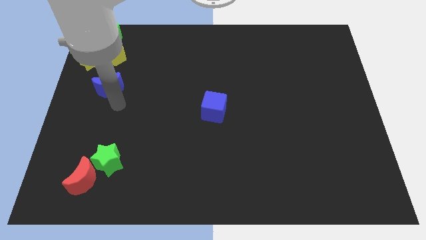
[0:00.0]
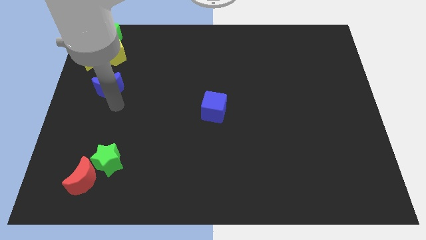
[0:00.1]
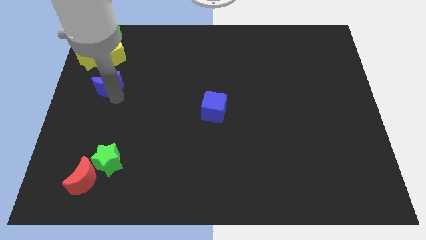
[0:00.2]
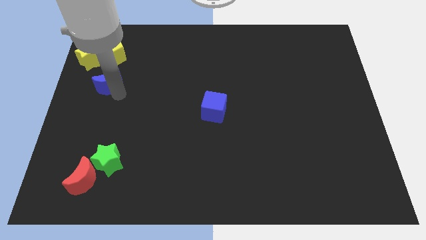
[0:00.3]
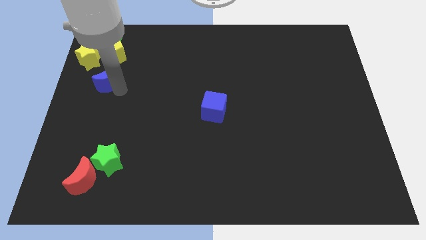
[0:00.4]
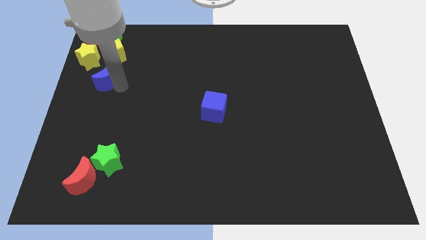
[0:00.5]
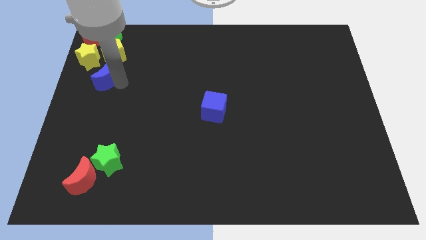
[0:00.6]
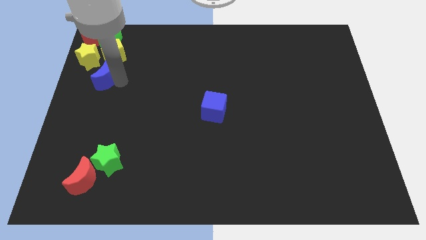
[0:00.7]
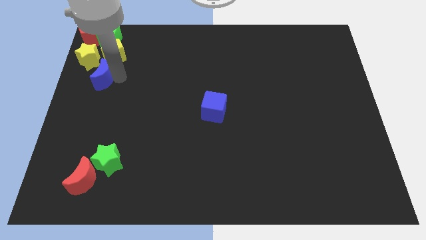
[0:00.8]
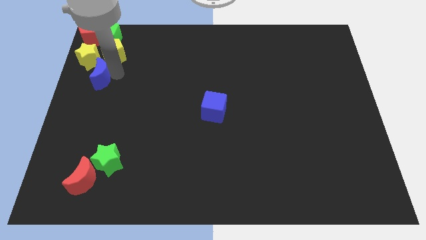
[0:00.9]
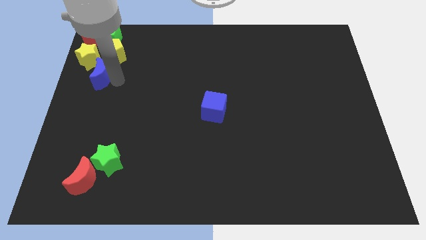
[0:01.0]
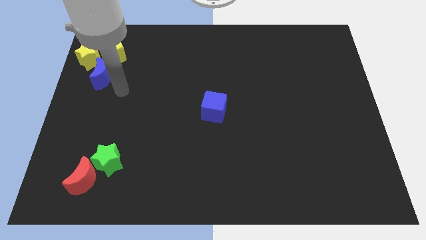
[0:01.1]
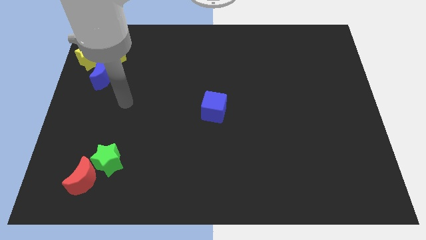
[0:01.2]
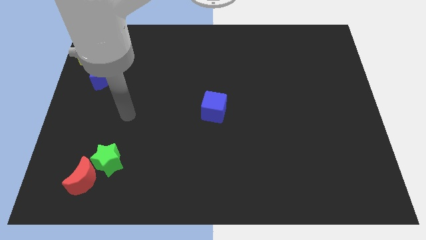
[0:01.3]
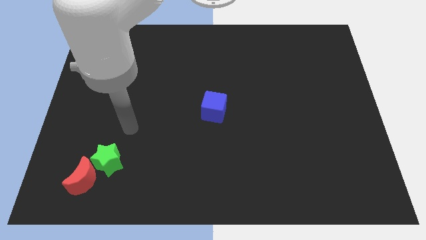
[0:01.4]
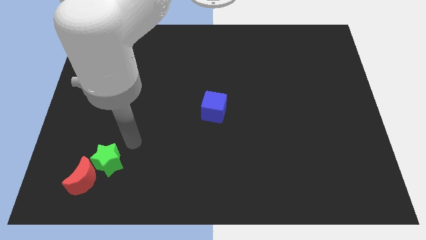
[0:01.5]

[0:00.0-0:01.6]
move the blue crescent to the top left of the board

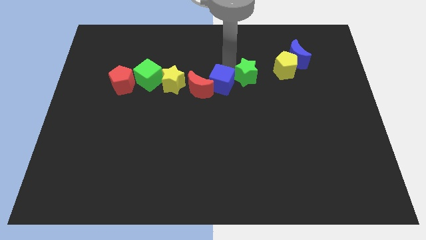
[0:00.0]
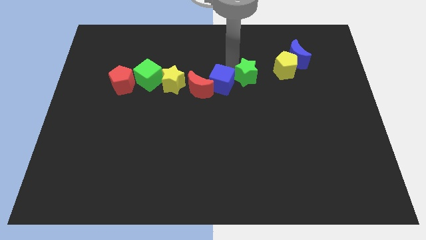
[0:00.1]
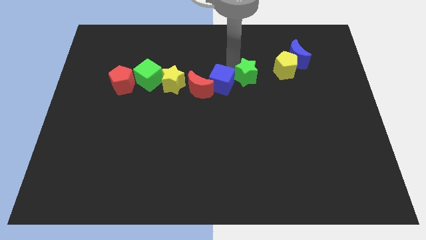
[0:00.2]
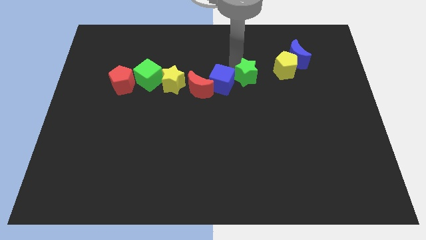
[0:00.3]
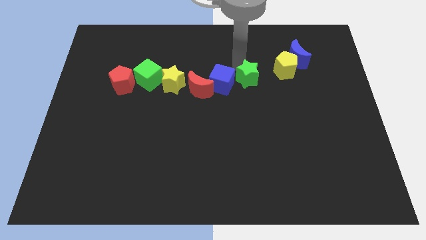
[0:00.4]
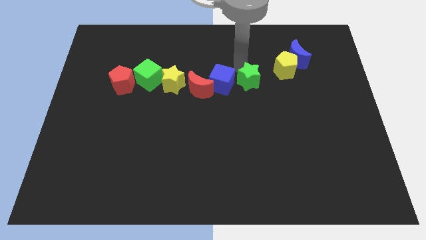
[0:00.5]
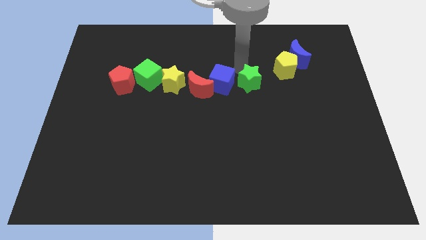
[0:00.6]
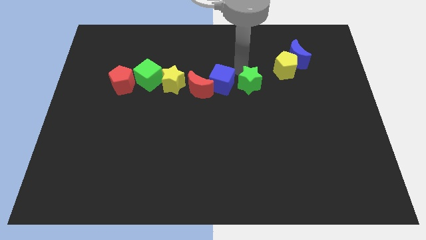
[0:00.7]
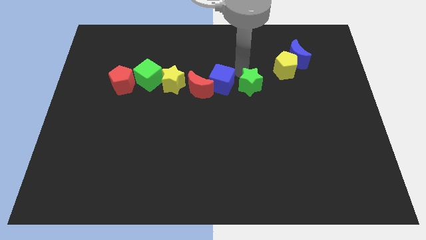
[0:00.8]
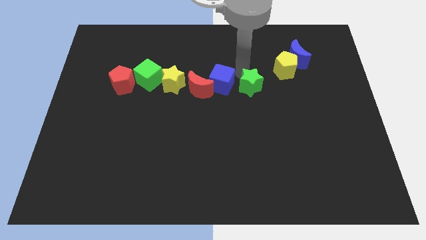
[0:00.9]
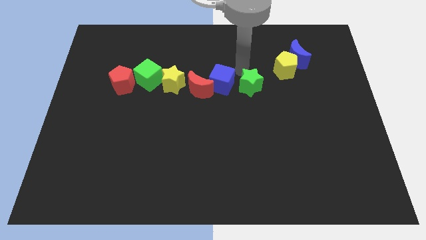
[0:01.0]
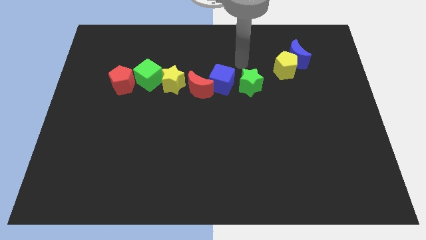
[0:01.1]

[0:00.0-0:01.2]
place the green star in between the blue cube and the green star

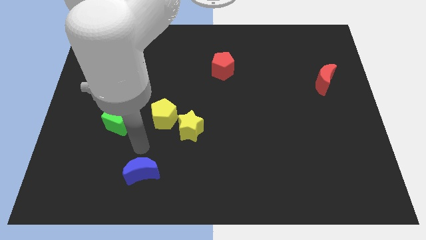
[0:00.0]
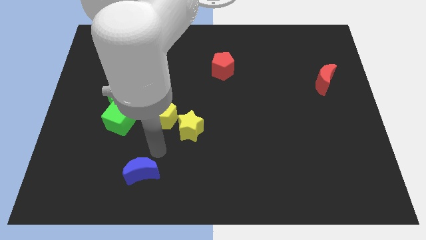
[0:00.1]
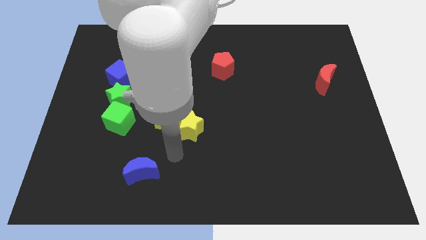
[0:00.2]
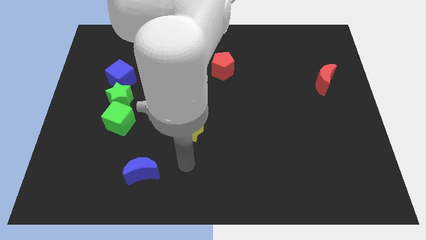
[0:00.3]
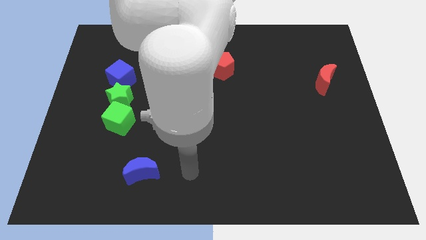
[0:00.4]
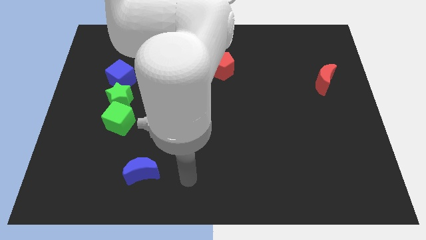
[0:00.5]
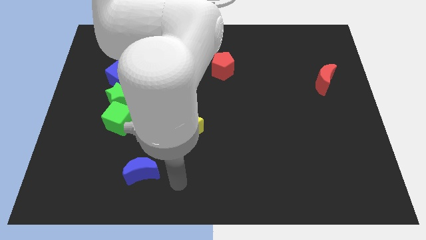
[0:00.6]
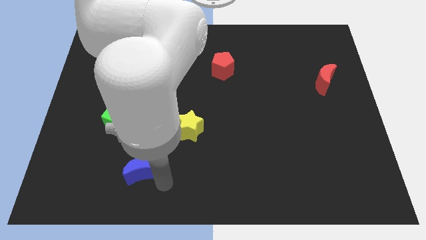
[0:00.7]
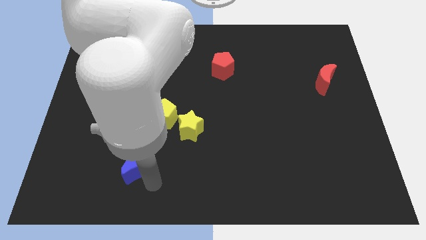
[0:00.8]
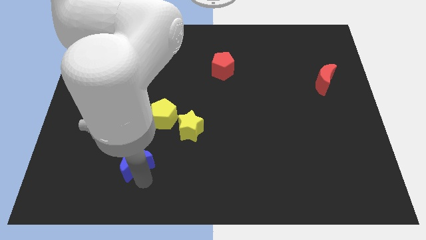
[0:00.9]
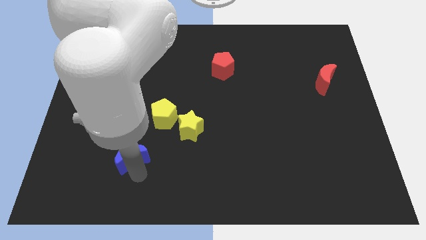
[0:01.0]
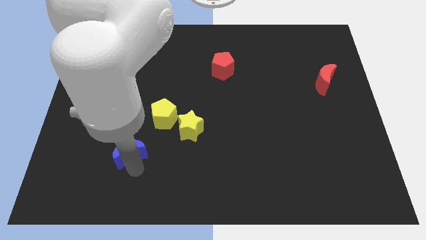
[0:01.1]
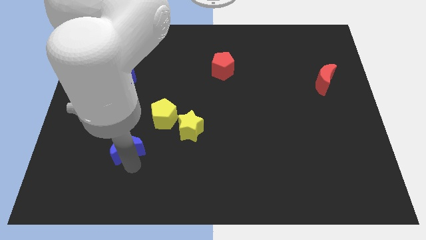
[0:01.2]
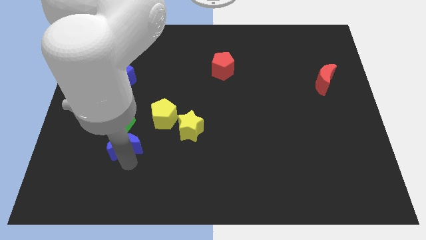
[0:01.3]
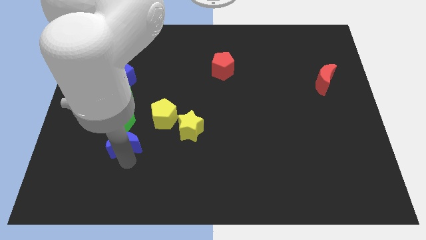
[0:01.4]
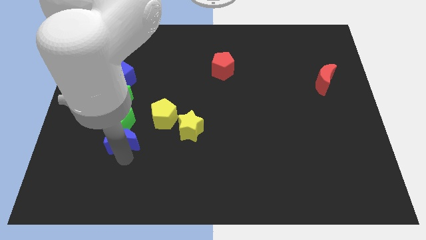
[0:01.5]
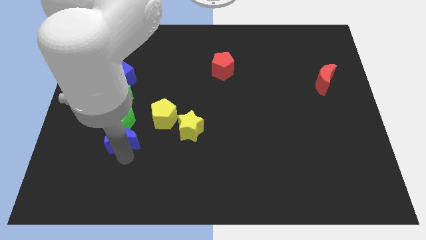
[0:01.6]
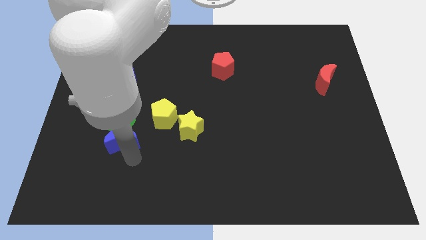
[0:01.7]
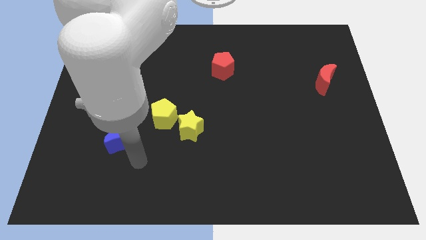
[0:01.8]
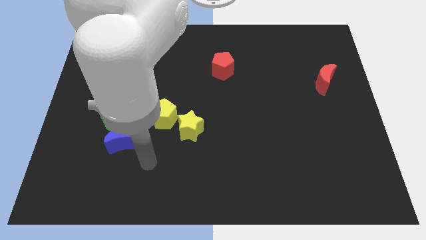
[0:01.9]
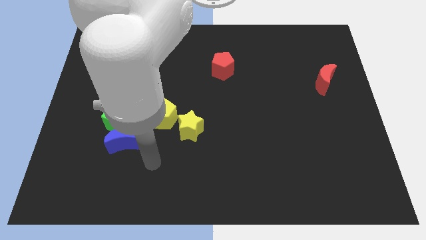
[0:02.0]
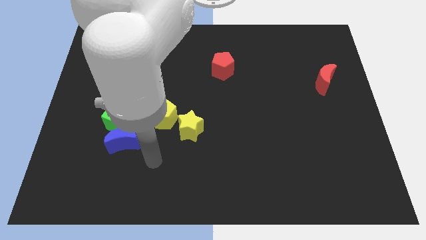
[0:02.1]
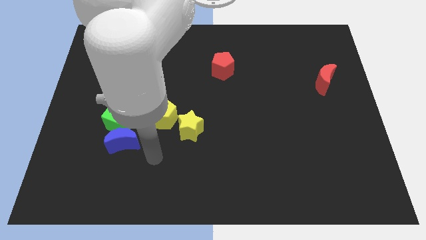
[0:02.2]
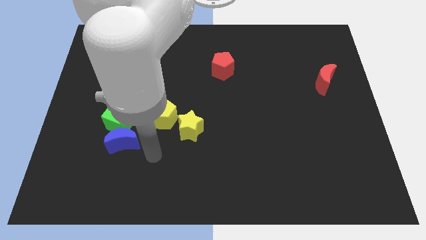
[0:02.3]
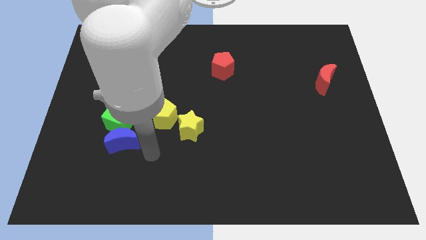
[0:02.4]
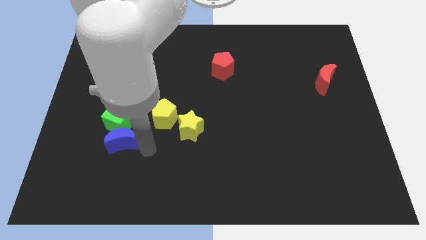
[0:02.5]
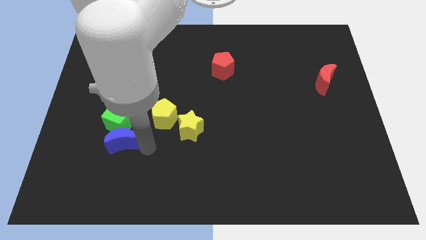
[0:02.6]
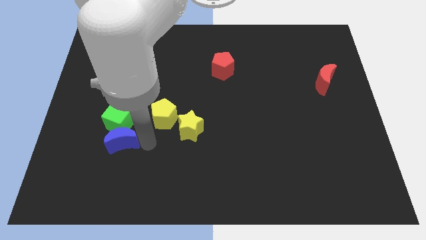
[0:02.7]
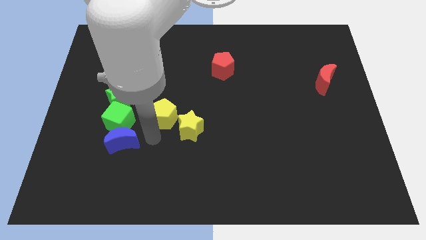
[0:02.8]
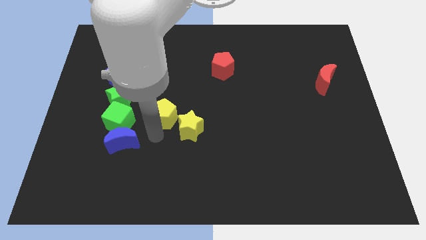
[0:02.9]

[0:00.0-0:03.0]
place the blue moon to the bottom of green cube

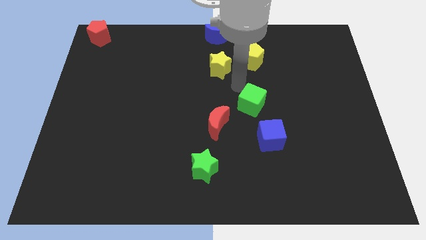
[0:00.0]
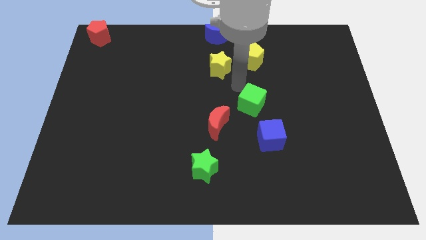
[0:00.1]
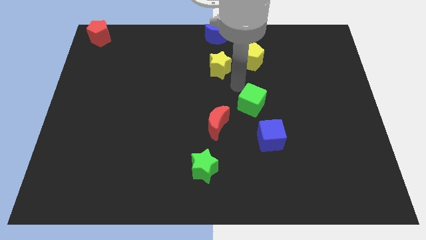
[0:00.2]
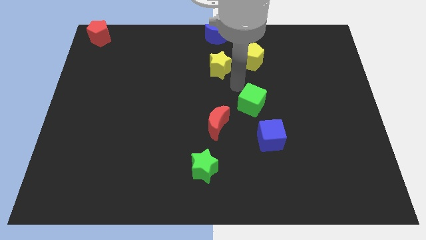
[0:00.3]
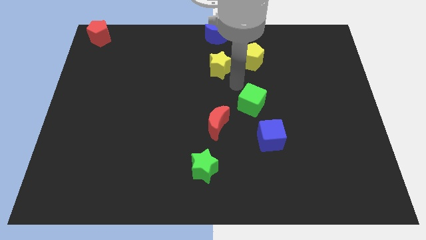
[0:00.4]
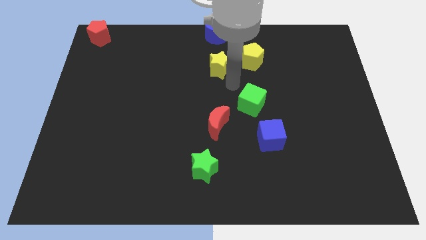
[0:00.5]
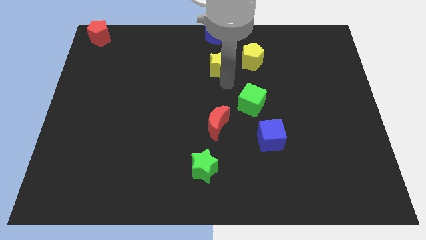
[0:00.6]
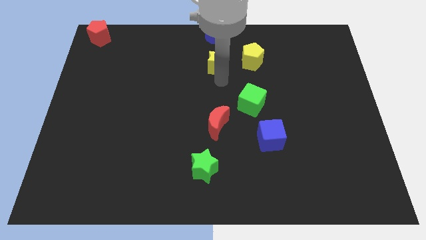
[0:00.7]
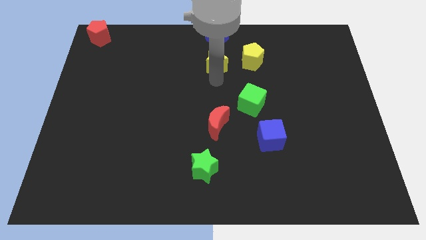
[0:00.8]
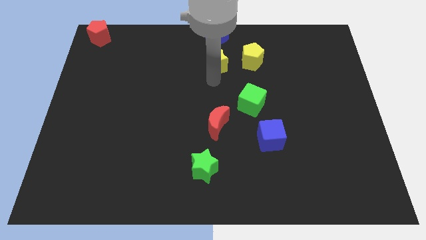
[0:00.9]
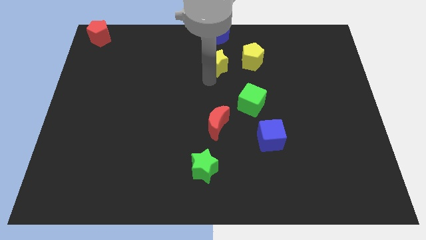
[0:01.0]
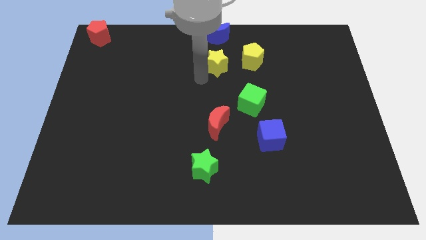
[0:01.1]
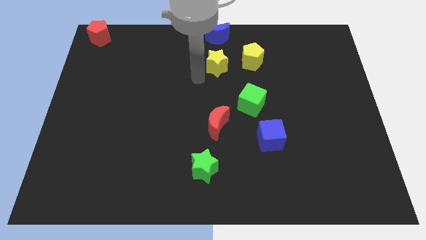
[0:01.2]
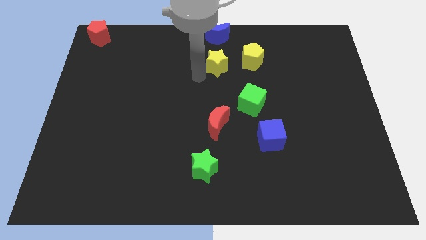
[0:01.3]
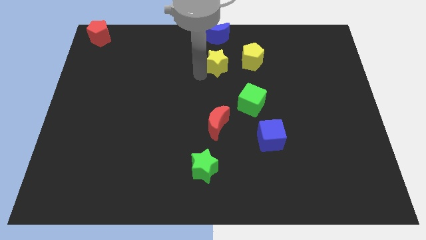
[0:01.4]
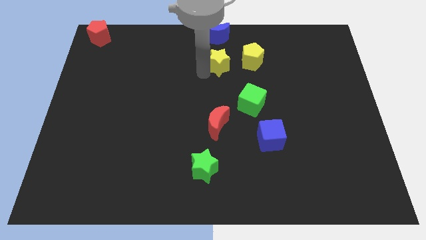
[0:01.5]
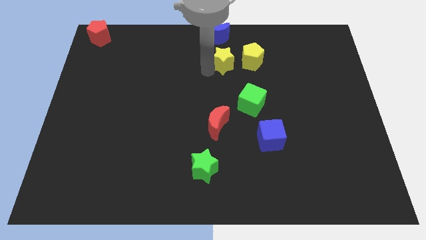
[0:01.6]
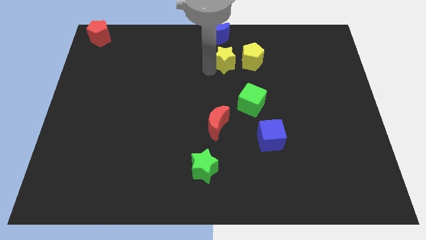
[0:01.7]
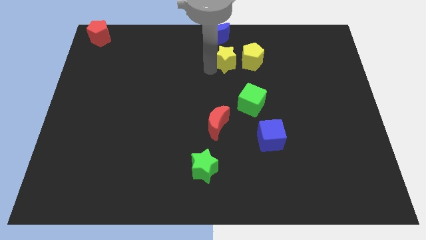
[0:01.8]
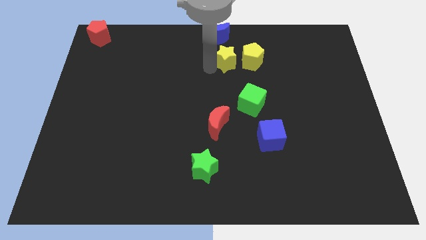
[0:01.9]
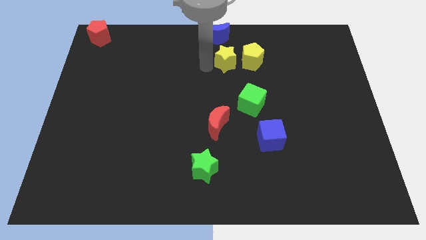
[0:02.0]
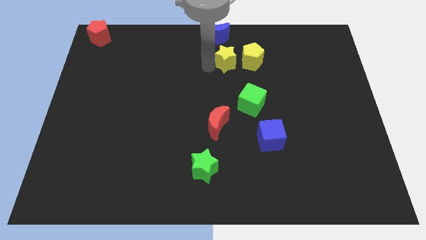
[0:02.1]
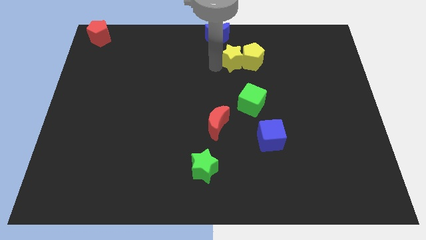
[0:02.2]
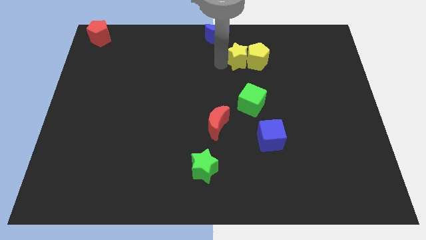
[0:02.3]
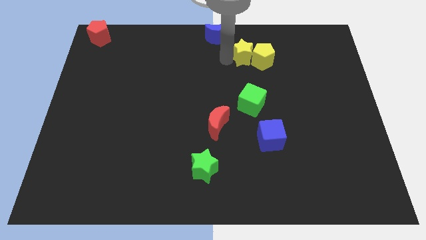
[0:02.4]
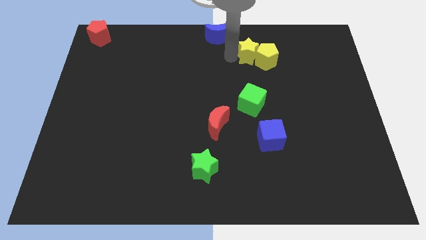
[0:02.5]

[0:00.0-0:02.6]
push the yellow star into yellow pentagon

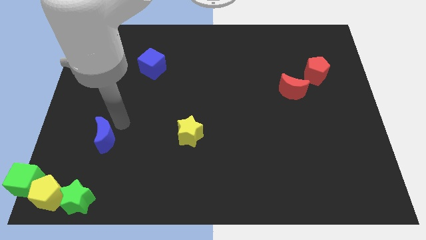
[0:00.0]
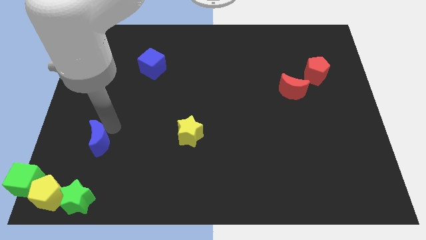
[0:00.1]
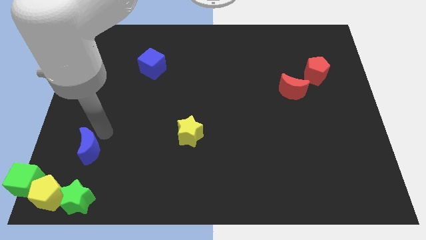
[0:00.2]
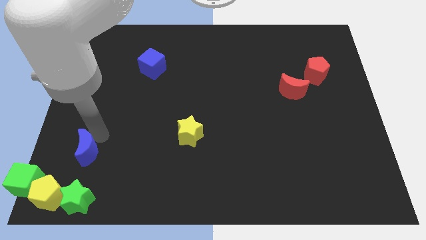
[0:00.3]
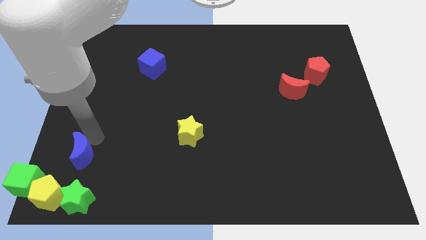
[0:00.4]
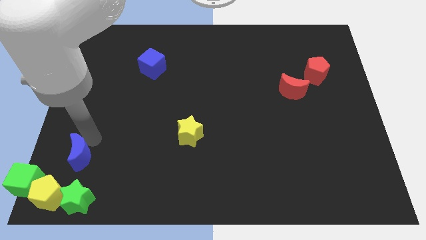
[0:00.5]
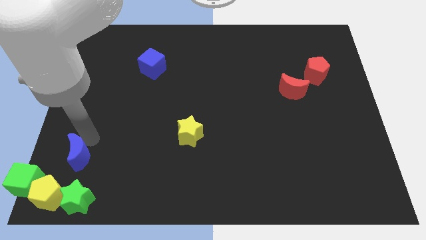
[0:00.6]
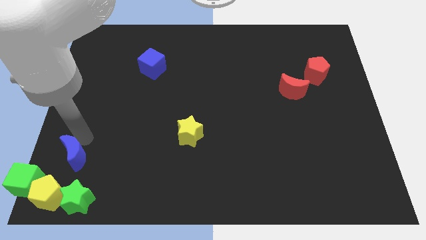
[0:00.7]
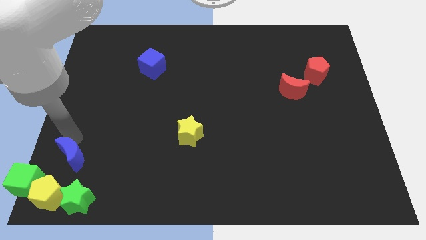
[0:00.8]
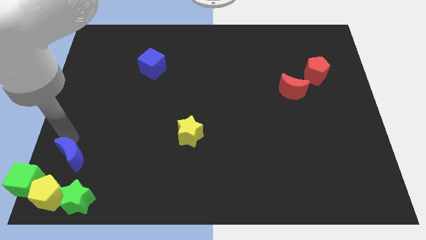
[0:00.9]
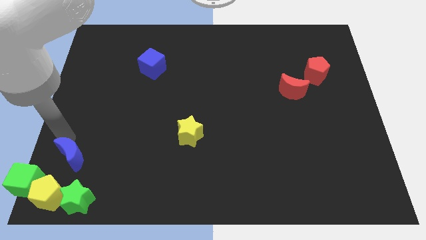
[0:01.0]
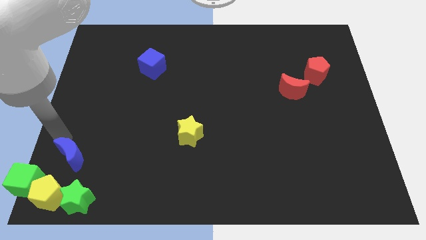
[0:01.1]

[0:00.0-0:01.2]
place blue moon above the yellow pentagon
